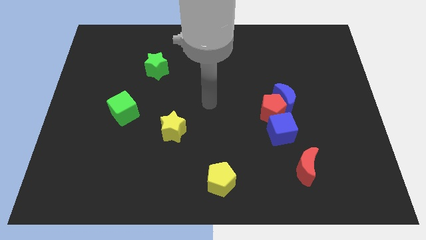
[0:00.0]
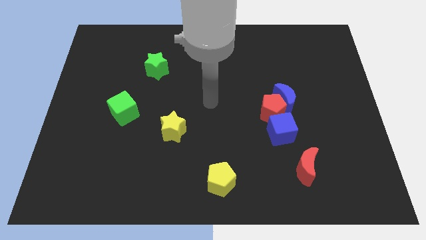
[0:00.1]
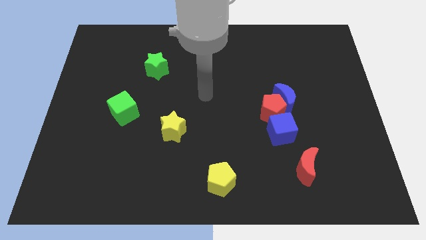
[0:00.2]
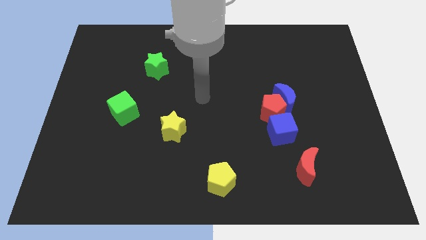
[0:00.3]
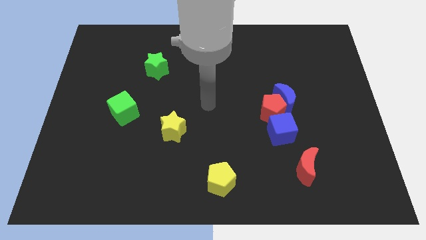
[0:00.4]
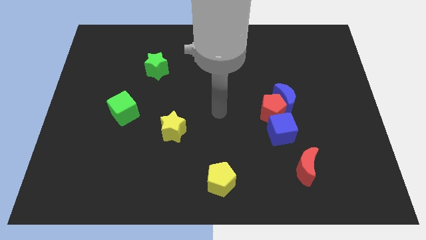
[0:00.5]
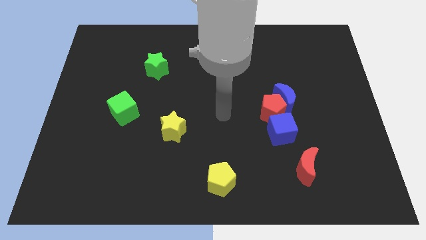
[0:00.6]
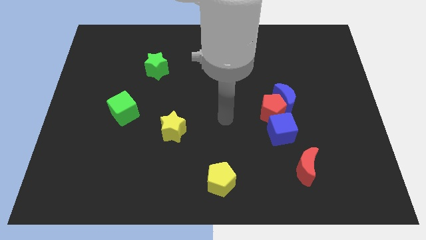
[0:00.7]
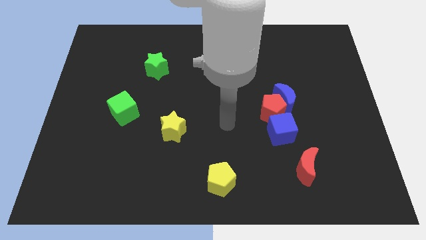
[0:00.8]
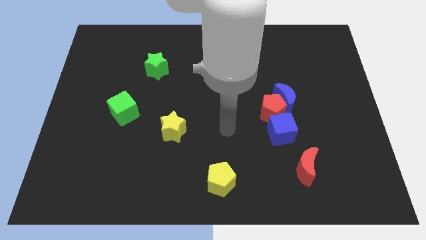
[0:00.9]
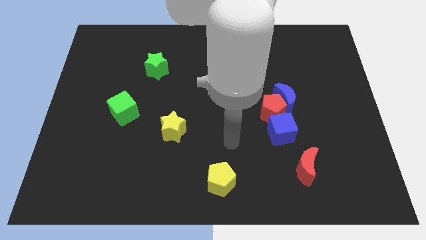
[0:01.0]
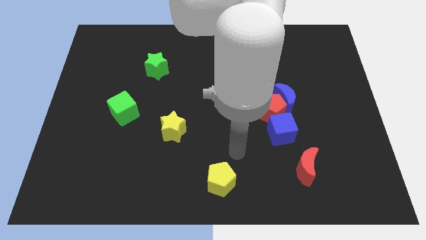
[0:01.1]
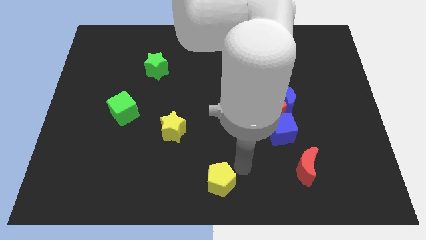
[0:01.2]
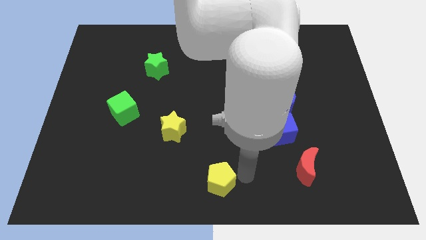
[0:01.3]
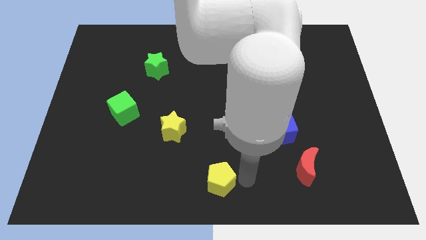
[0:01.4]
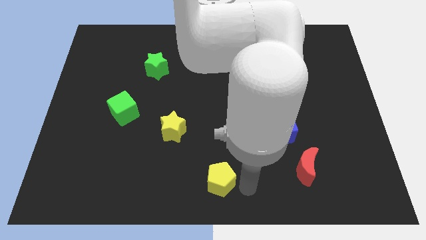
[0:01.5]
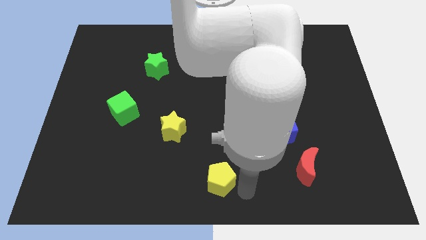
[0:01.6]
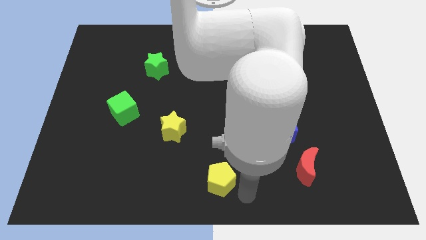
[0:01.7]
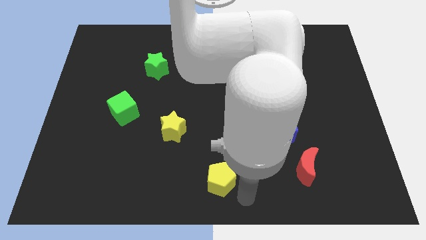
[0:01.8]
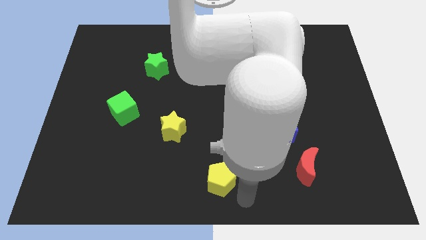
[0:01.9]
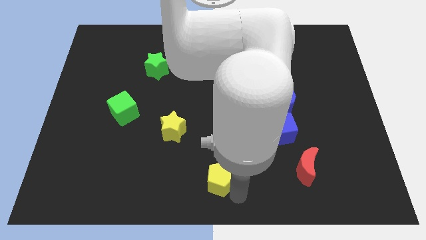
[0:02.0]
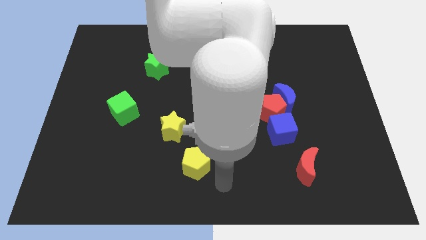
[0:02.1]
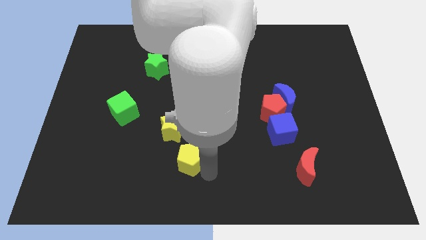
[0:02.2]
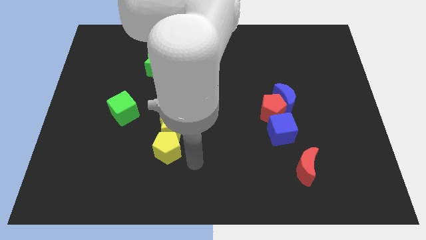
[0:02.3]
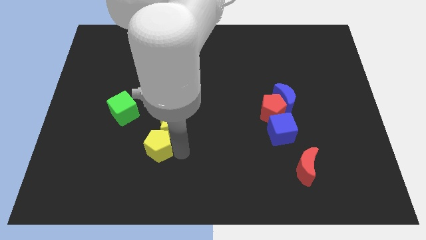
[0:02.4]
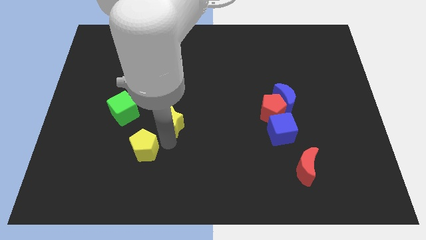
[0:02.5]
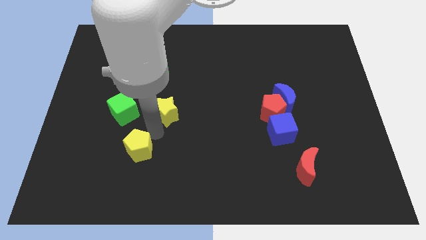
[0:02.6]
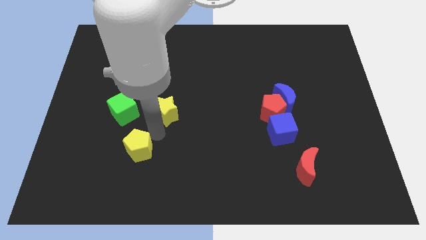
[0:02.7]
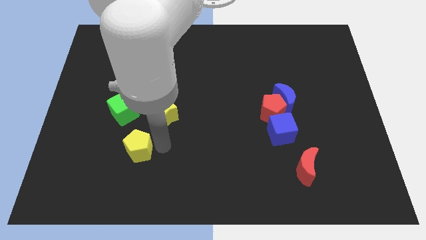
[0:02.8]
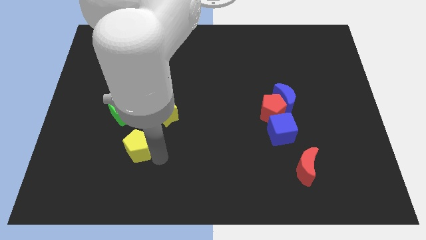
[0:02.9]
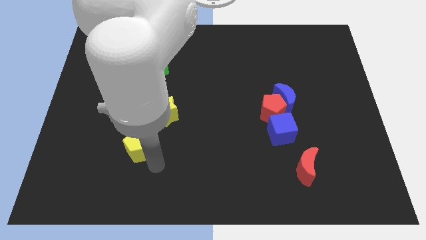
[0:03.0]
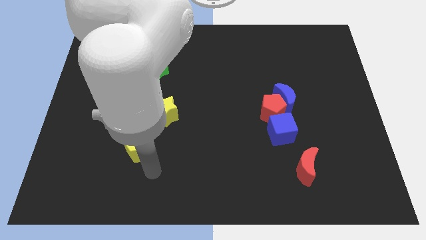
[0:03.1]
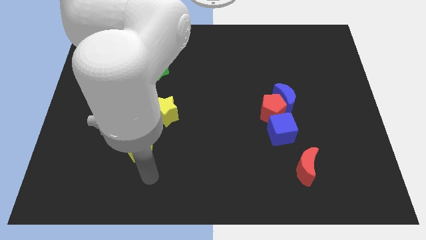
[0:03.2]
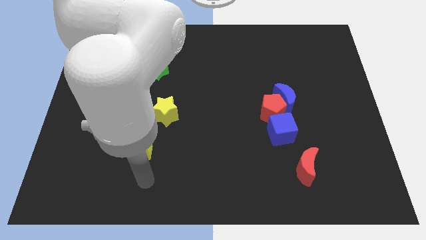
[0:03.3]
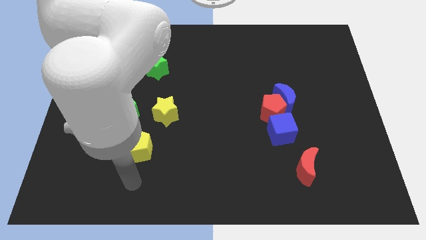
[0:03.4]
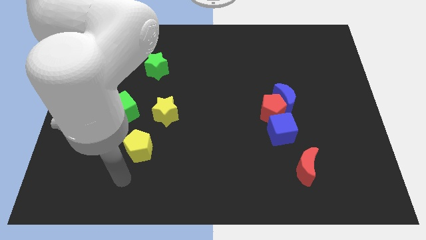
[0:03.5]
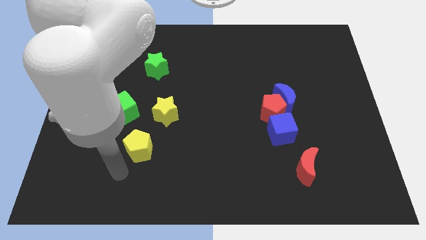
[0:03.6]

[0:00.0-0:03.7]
hit the yellow star with the yellow pentagon

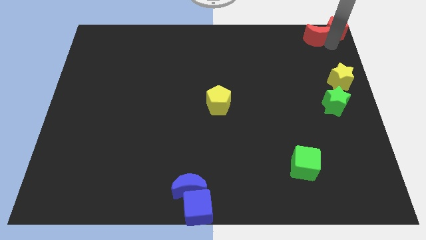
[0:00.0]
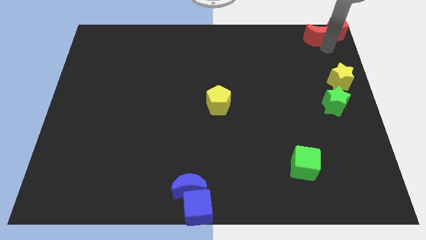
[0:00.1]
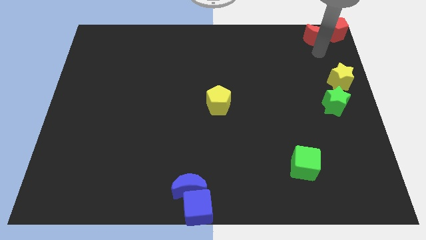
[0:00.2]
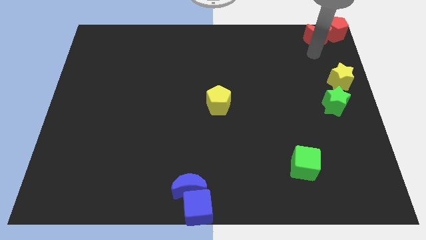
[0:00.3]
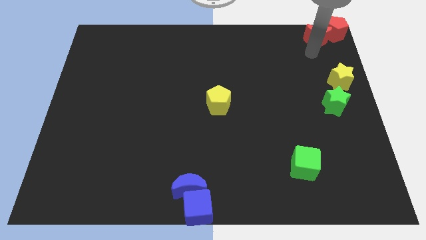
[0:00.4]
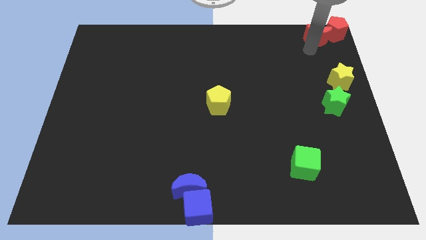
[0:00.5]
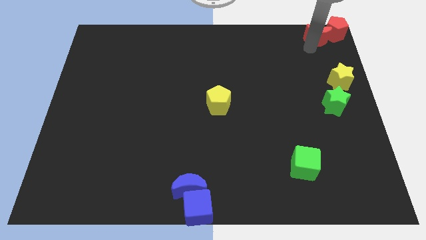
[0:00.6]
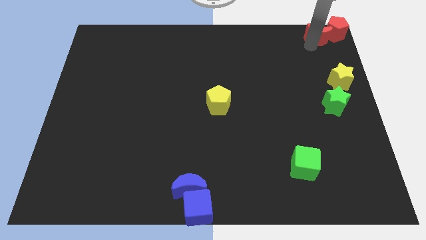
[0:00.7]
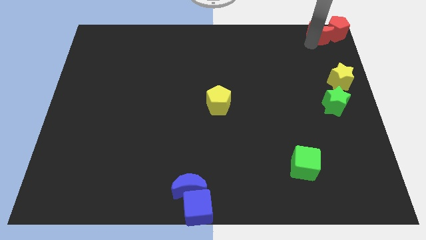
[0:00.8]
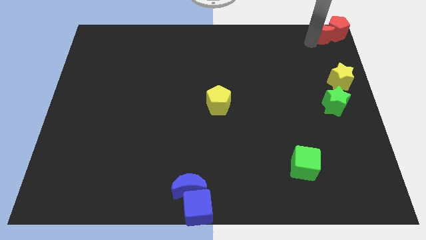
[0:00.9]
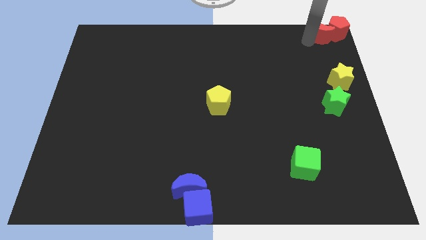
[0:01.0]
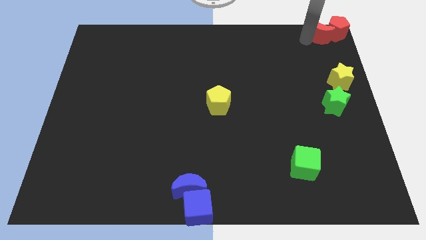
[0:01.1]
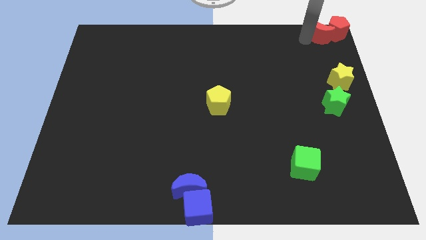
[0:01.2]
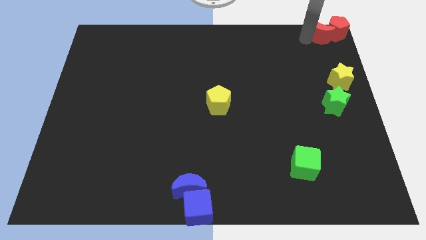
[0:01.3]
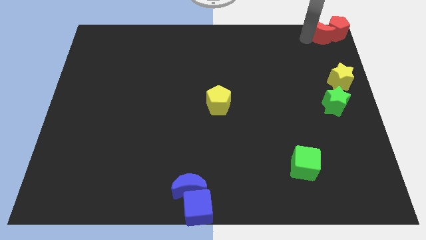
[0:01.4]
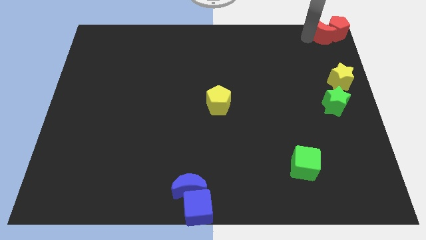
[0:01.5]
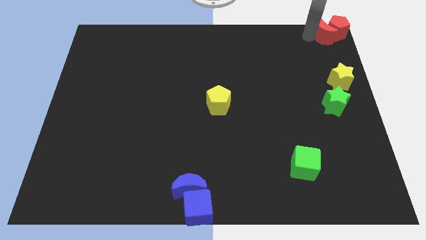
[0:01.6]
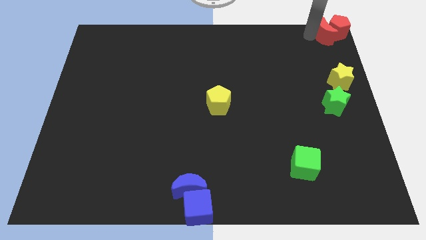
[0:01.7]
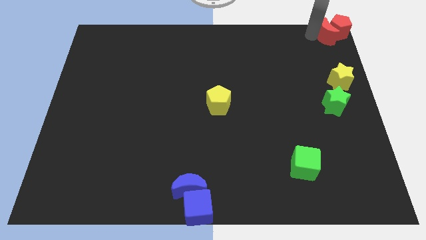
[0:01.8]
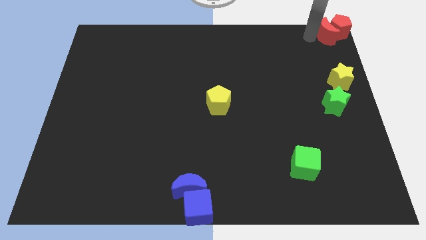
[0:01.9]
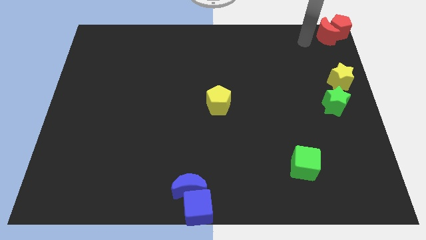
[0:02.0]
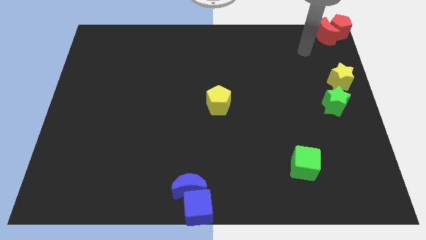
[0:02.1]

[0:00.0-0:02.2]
push the red crescent into the red pentagon

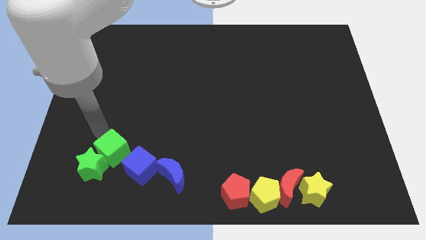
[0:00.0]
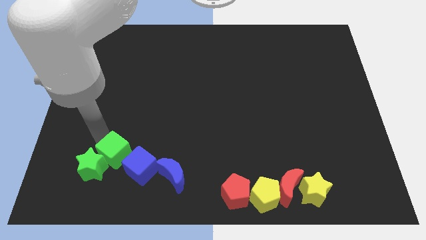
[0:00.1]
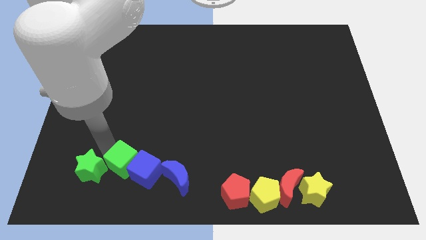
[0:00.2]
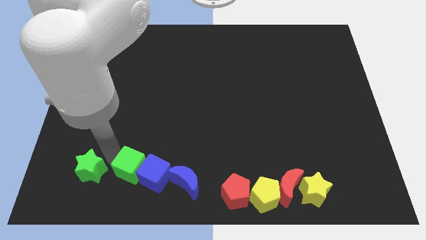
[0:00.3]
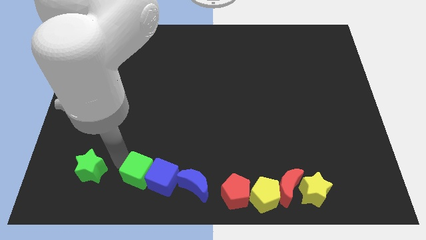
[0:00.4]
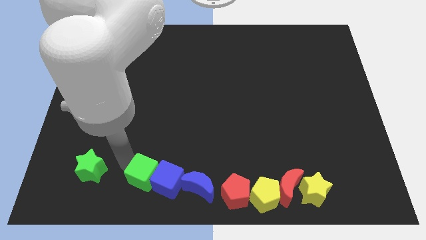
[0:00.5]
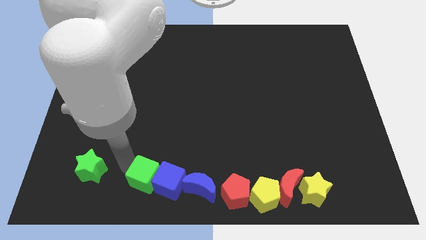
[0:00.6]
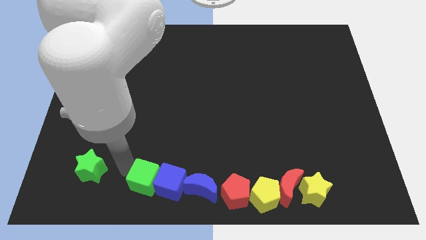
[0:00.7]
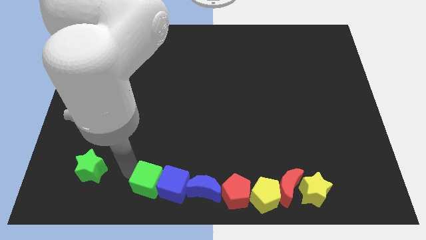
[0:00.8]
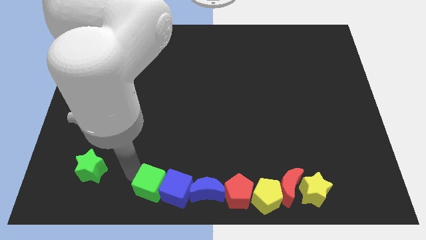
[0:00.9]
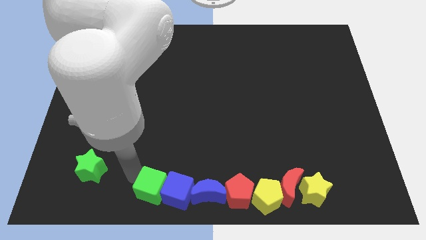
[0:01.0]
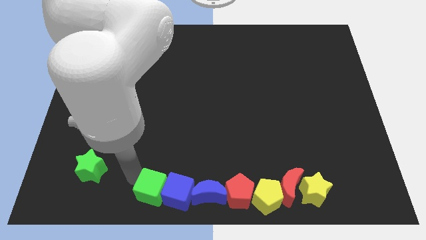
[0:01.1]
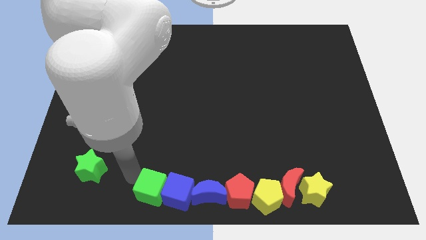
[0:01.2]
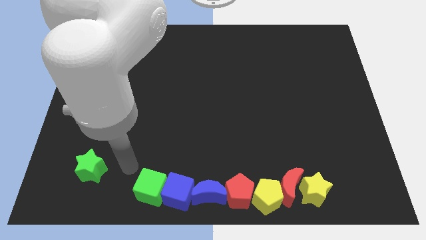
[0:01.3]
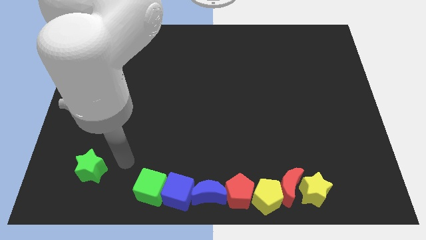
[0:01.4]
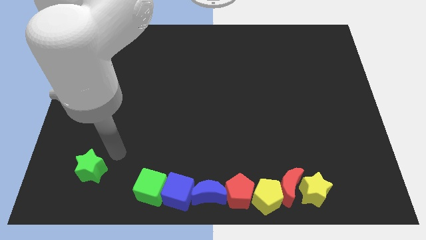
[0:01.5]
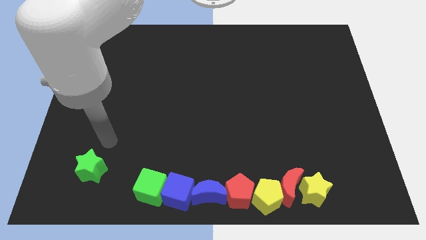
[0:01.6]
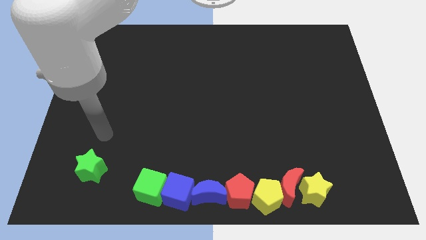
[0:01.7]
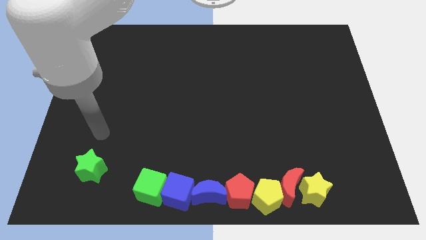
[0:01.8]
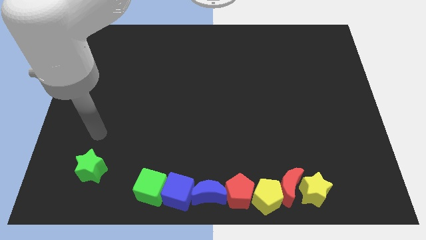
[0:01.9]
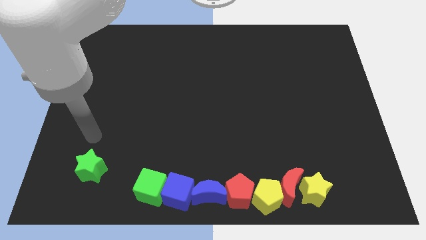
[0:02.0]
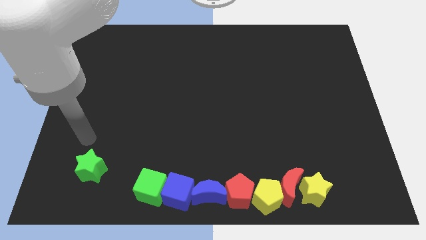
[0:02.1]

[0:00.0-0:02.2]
push green cube along with blue cube and blue crescent towards red pentagon

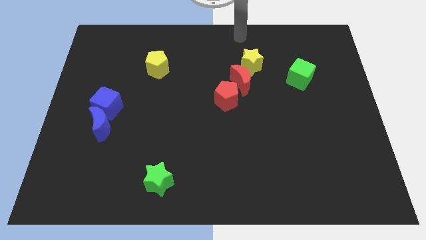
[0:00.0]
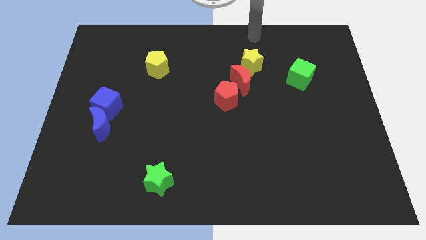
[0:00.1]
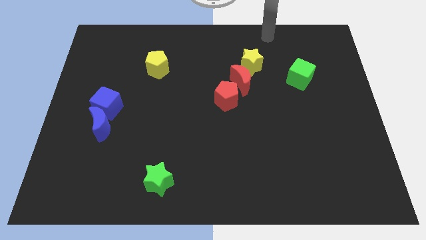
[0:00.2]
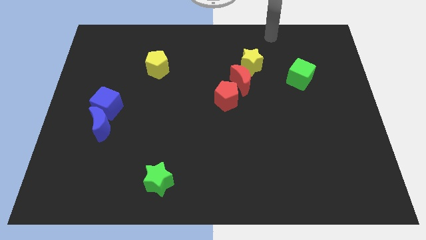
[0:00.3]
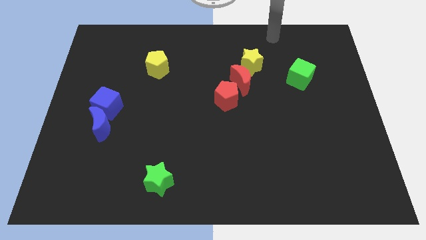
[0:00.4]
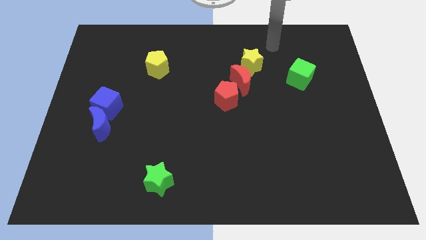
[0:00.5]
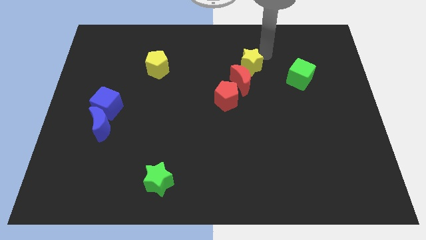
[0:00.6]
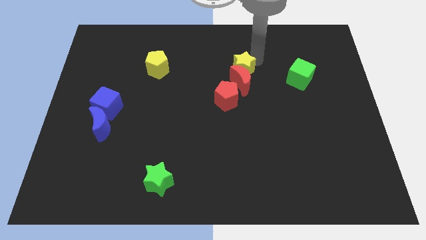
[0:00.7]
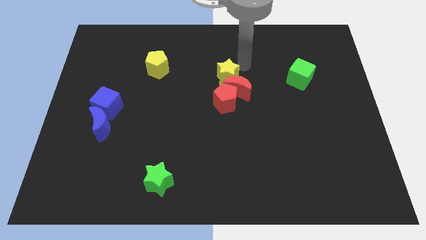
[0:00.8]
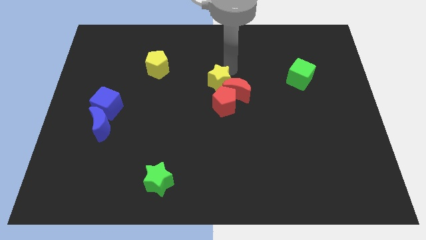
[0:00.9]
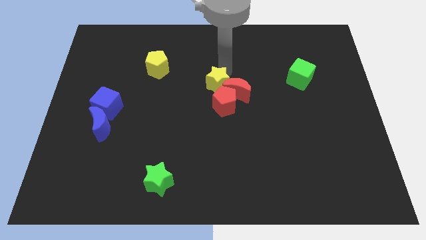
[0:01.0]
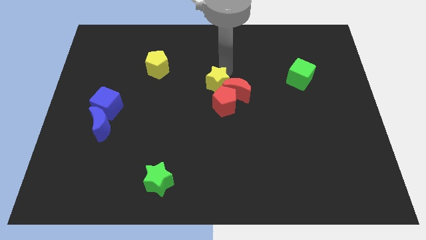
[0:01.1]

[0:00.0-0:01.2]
slide yellow star into red blocks
